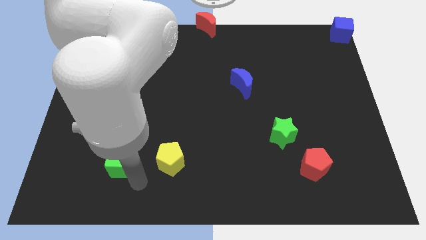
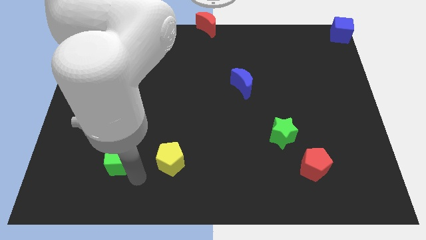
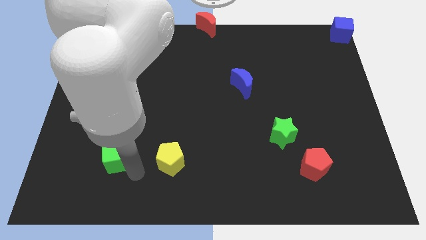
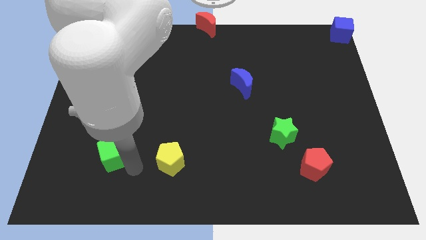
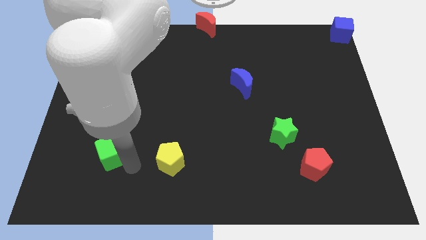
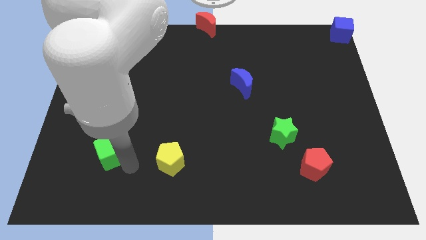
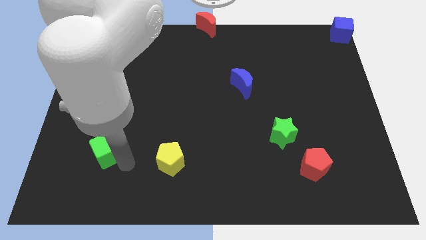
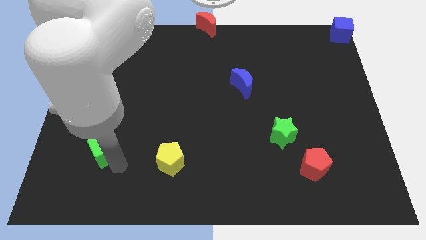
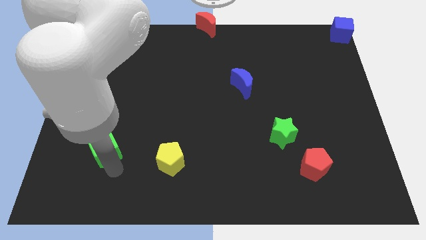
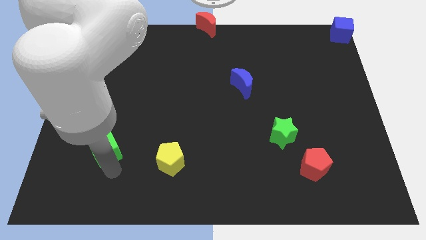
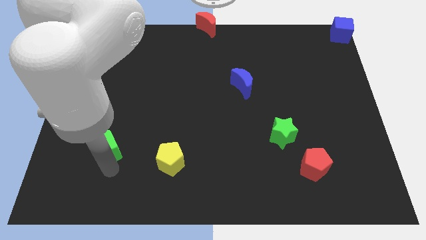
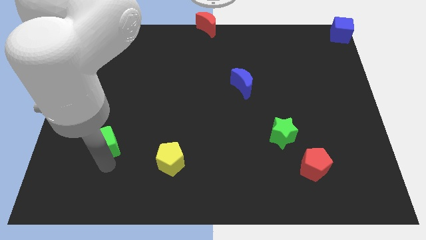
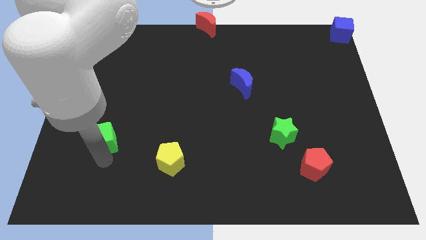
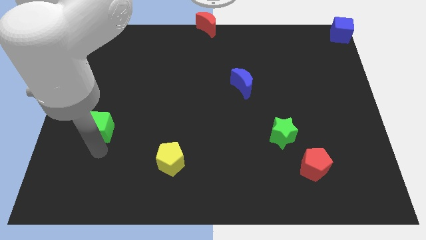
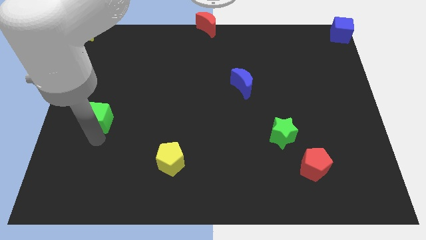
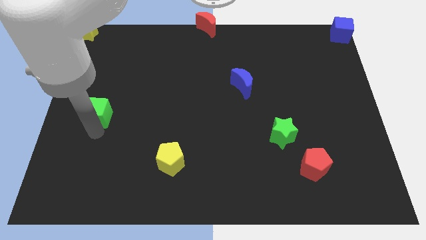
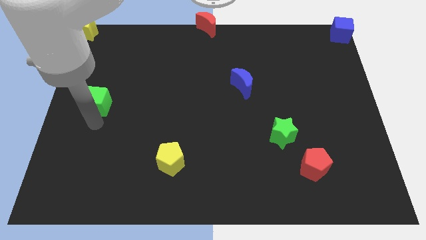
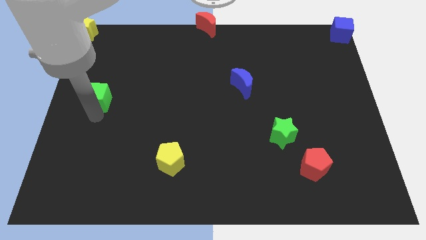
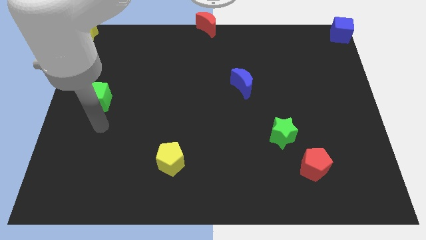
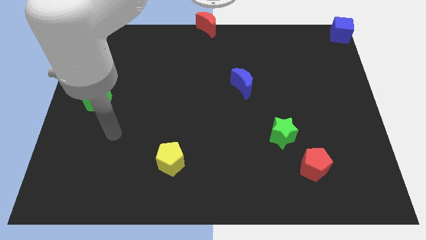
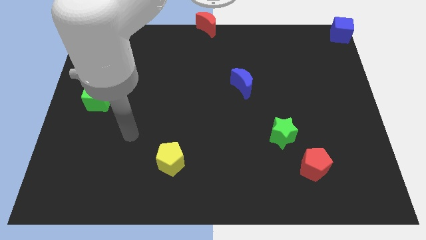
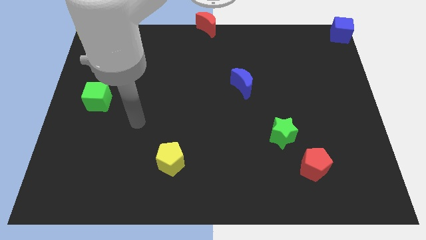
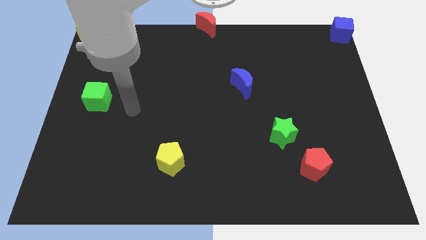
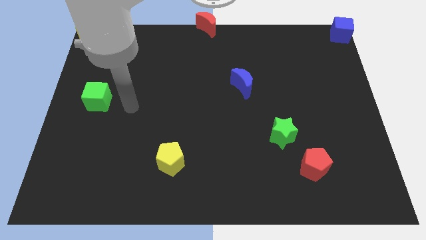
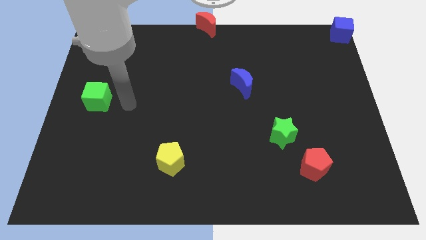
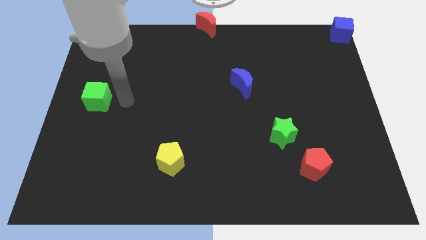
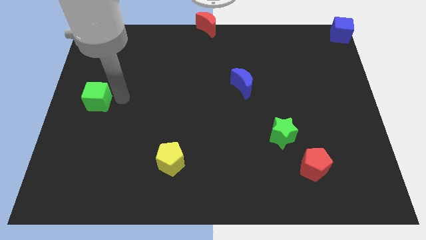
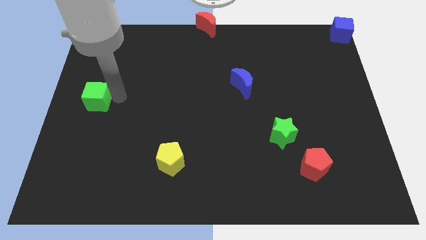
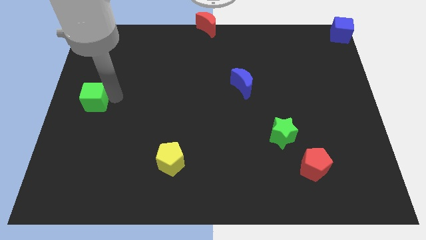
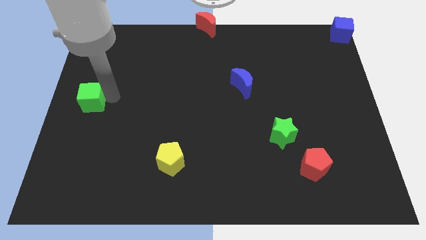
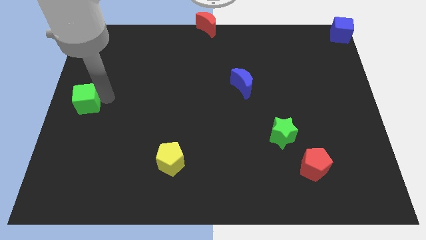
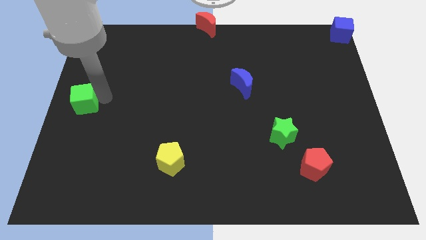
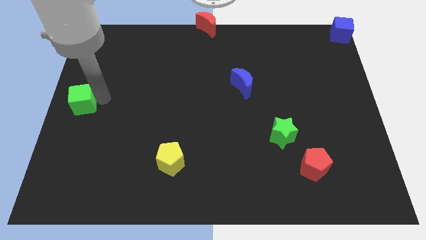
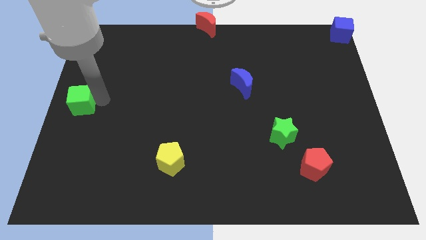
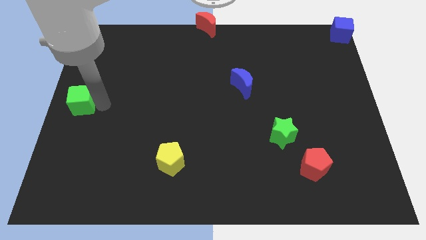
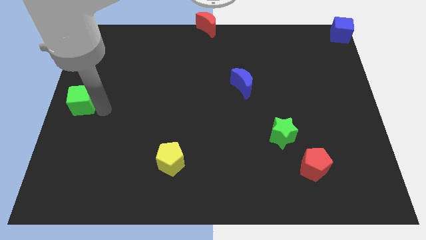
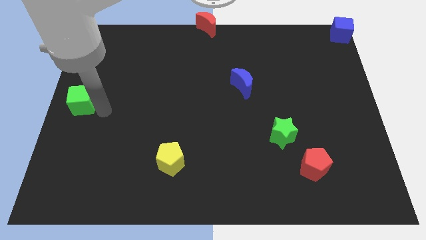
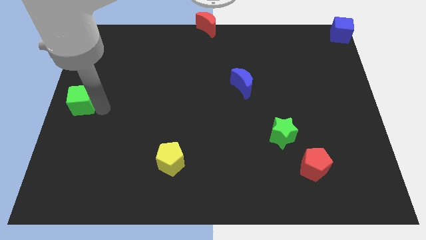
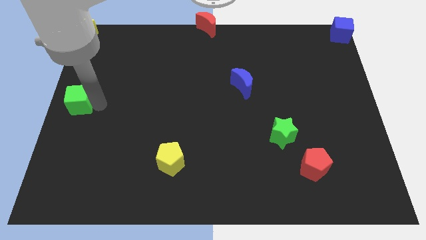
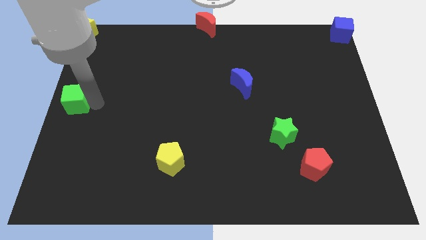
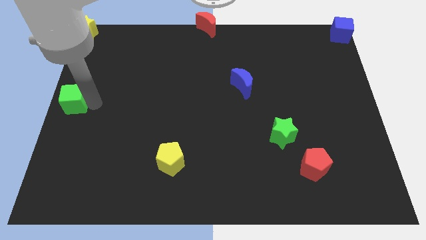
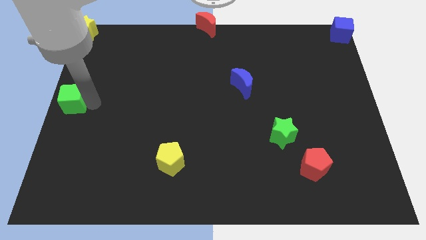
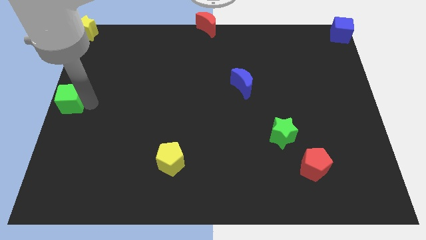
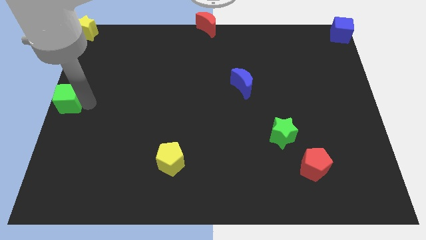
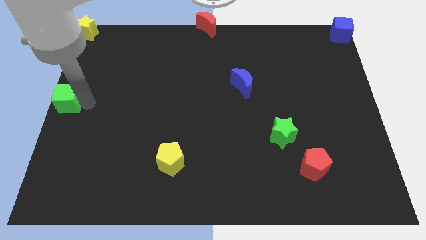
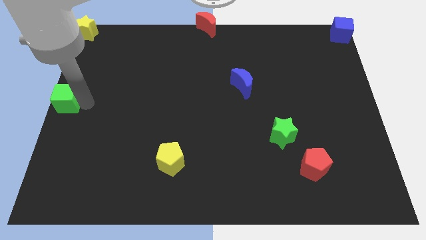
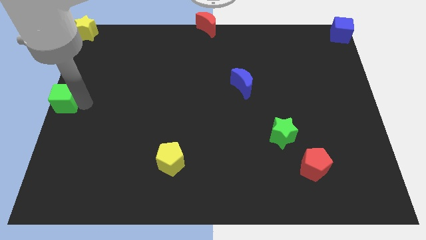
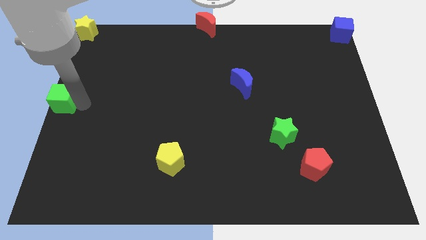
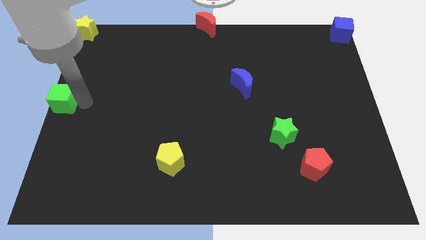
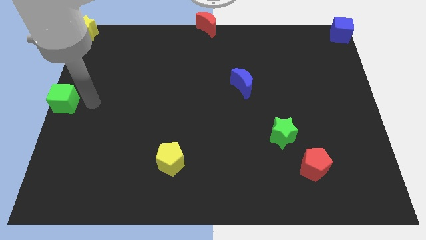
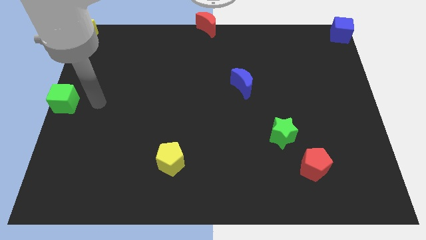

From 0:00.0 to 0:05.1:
move the green cube to the left center

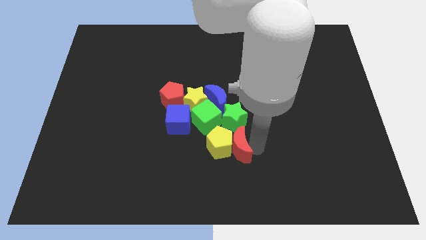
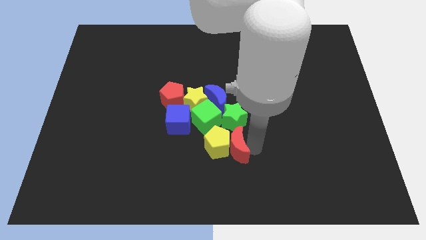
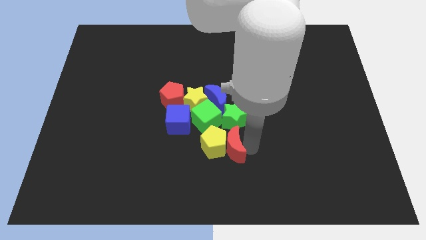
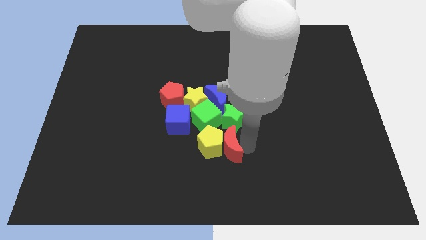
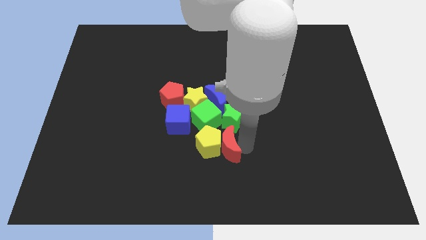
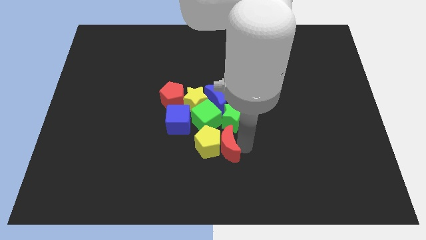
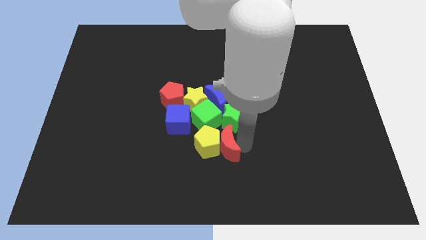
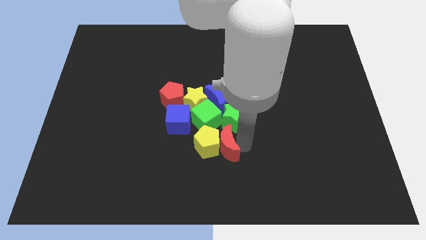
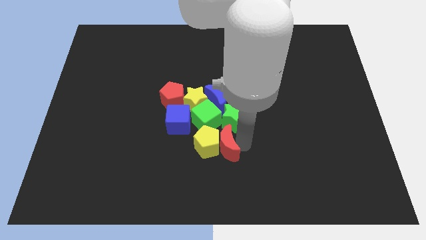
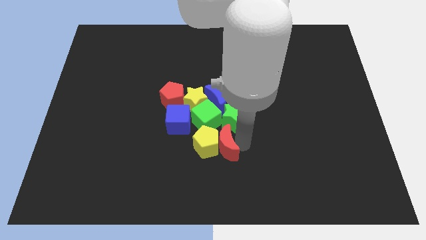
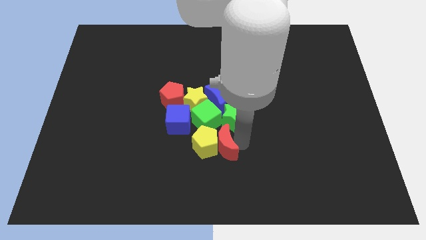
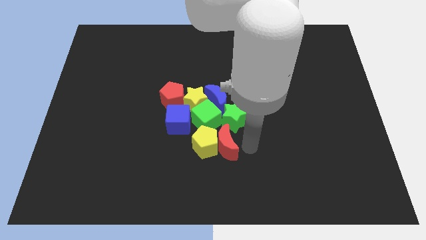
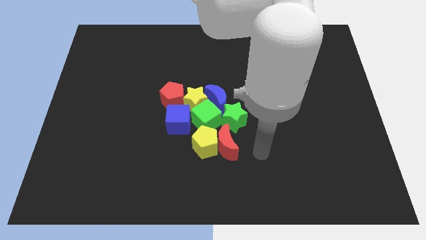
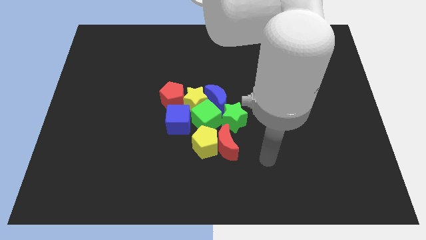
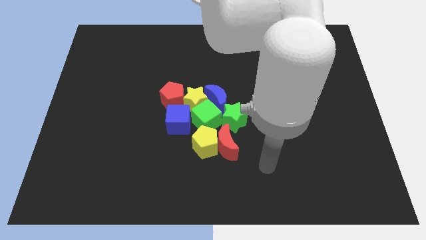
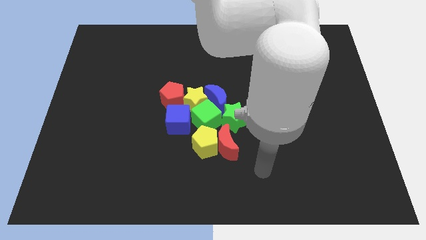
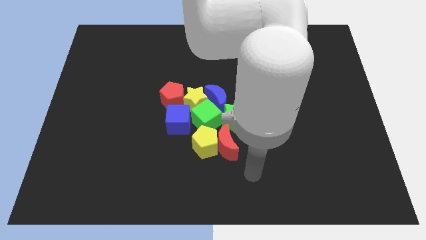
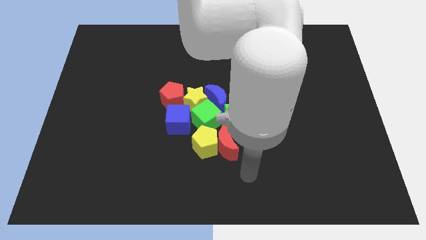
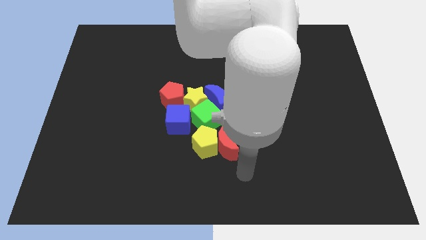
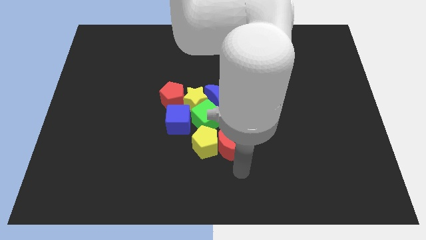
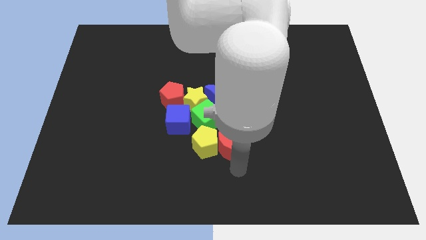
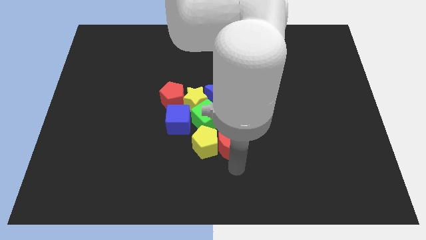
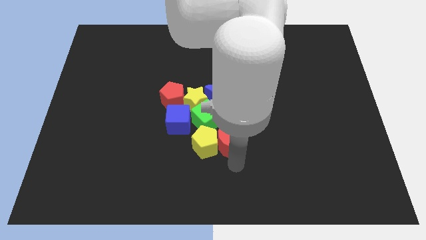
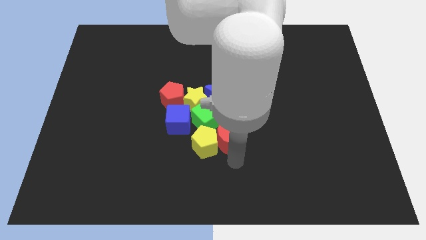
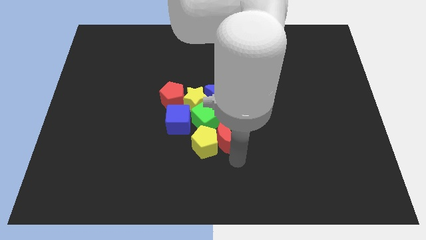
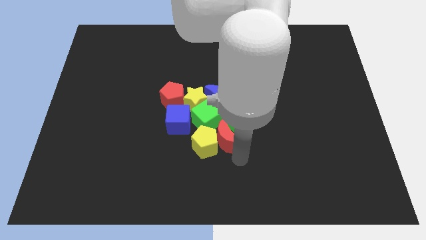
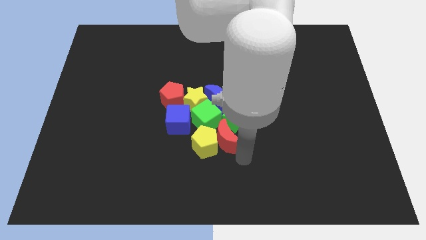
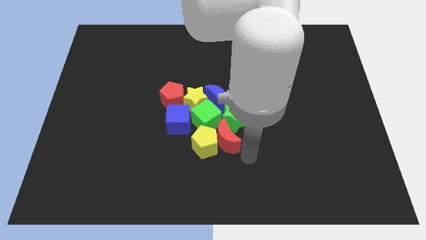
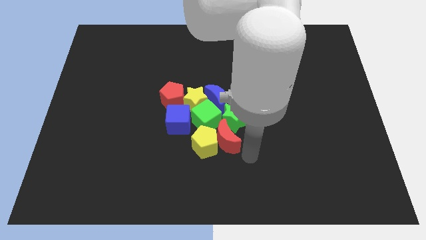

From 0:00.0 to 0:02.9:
slightly move the red moon up

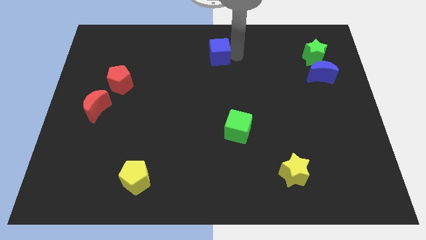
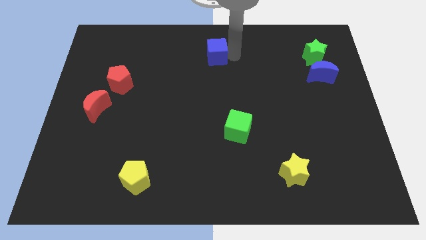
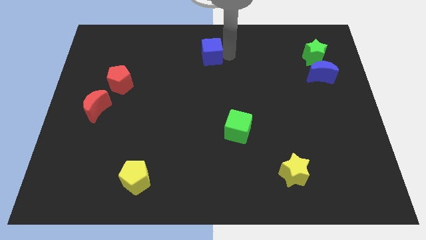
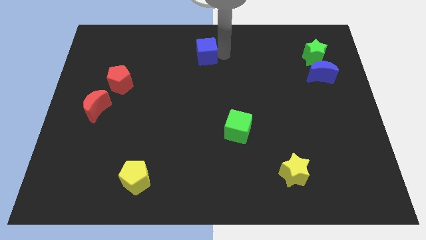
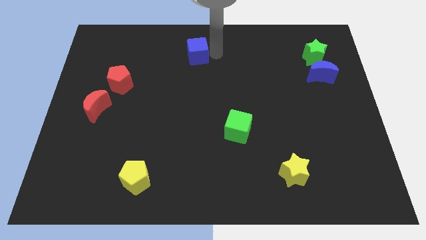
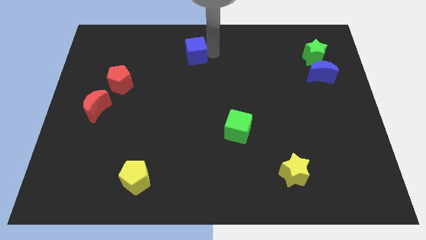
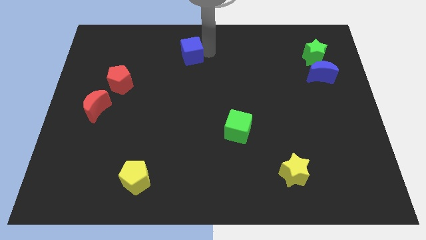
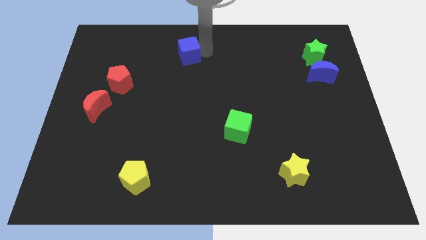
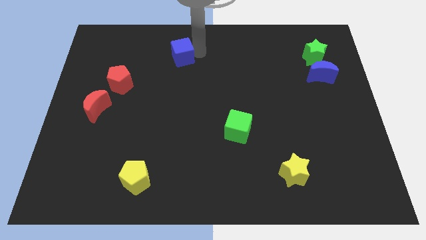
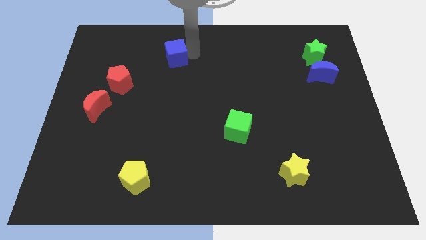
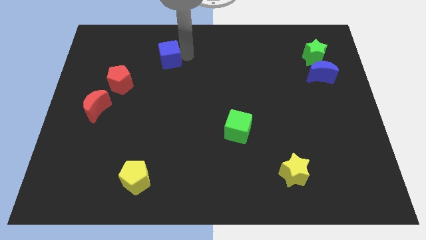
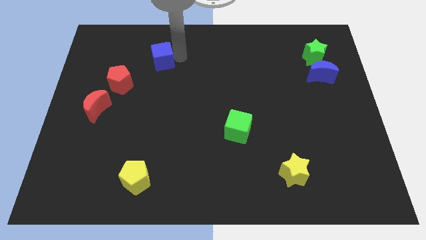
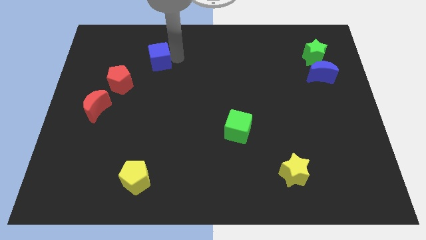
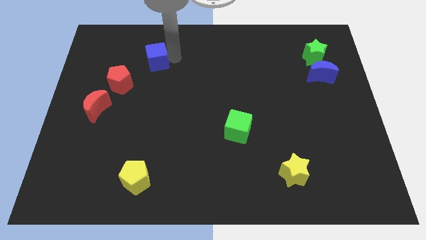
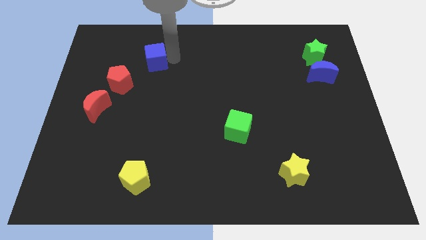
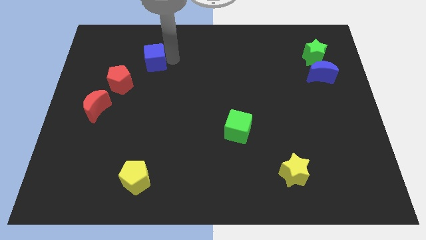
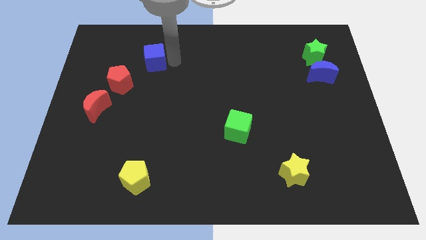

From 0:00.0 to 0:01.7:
move the blue cube slightly to the left side of the board
